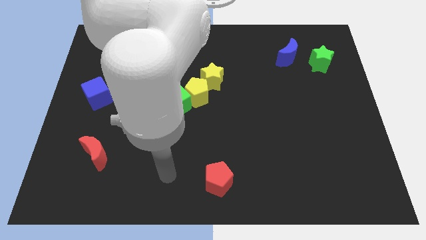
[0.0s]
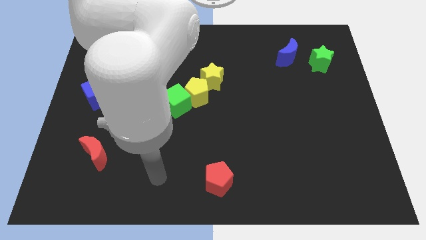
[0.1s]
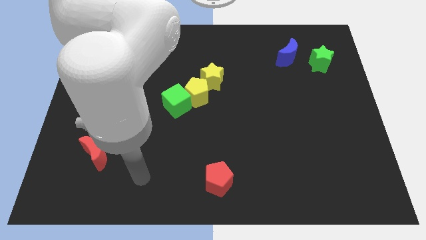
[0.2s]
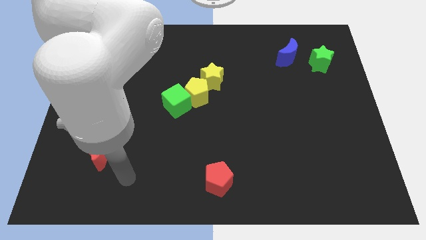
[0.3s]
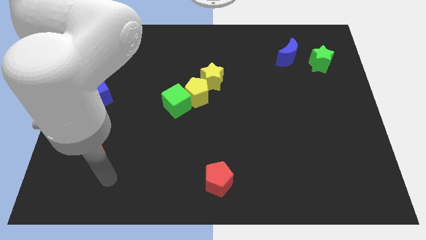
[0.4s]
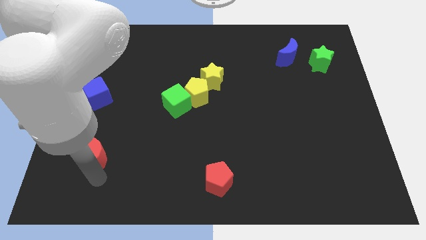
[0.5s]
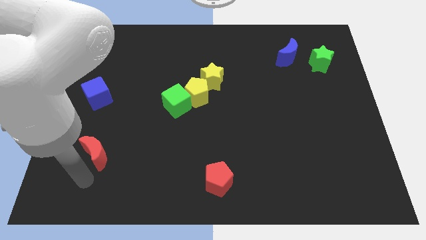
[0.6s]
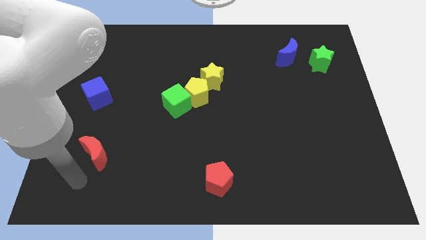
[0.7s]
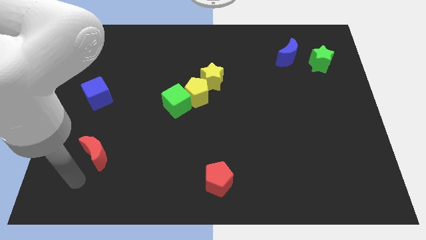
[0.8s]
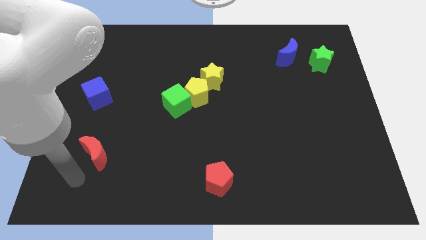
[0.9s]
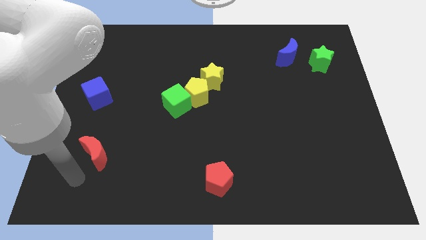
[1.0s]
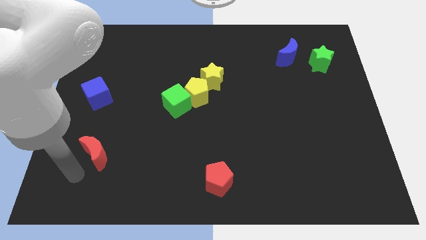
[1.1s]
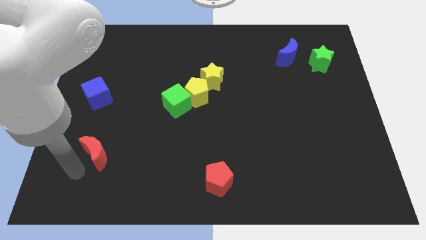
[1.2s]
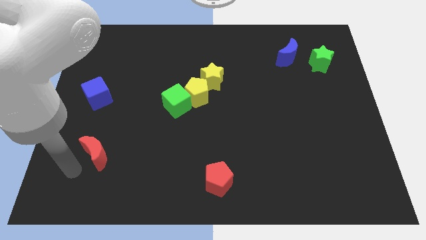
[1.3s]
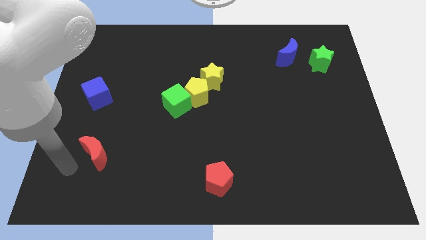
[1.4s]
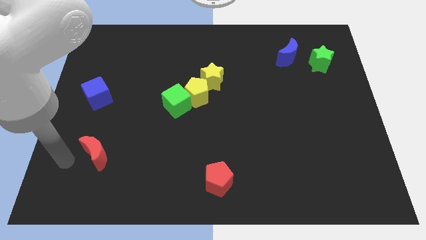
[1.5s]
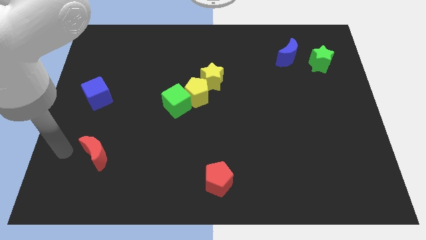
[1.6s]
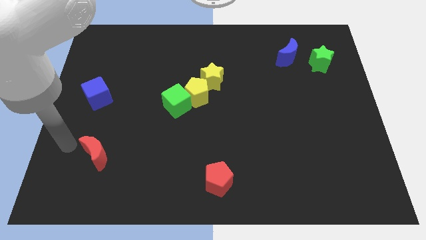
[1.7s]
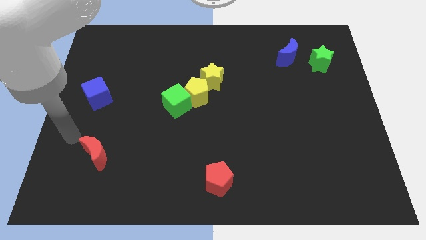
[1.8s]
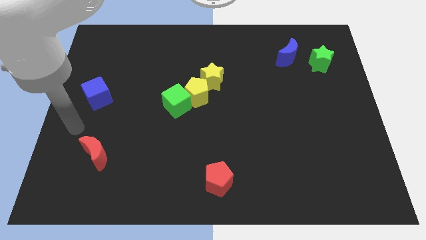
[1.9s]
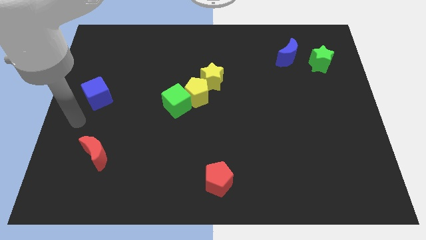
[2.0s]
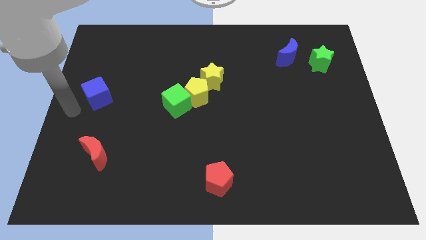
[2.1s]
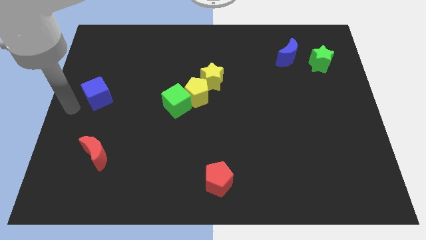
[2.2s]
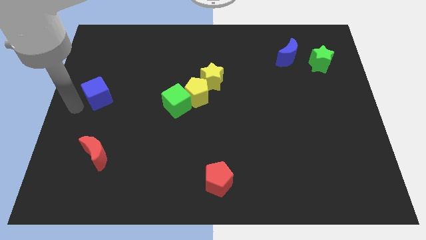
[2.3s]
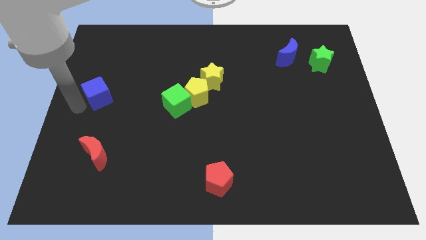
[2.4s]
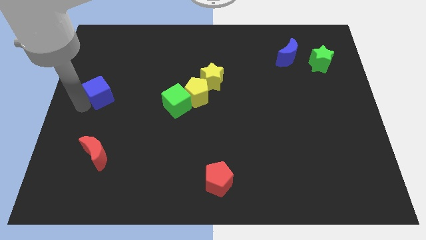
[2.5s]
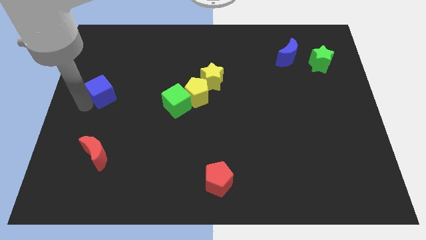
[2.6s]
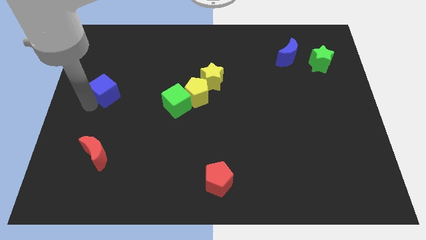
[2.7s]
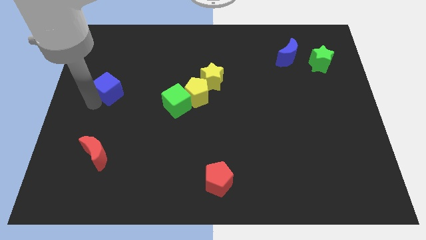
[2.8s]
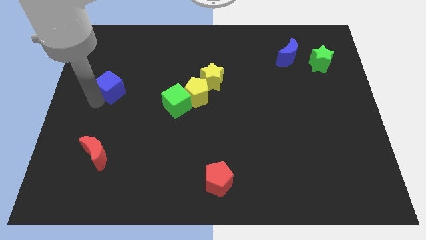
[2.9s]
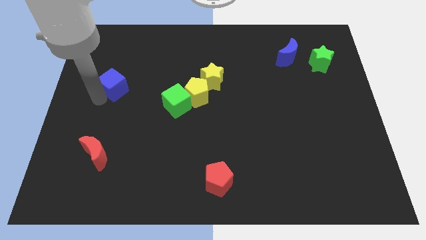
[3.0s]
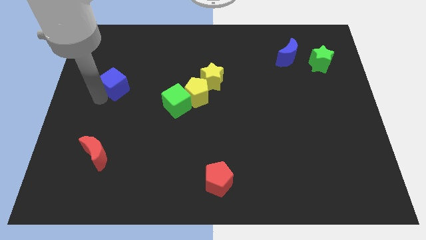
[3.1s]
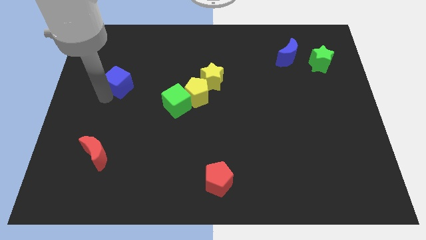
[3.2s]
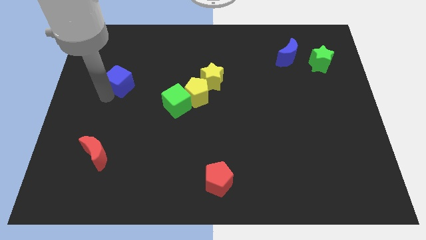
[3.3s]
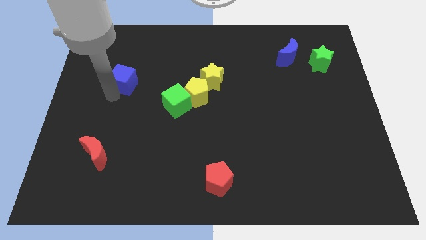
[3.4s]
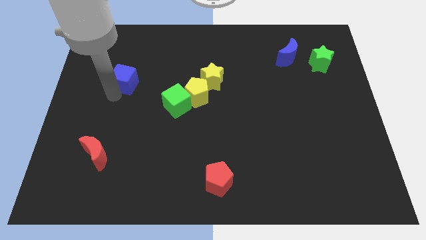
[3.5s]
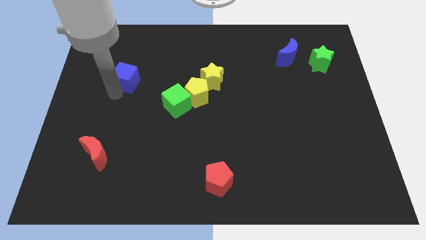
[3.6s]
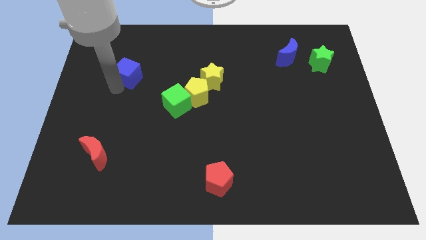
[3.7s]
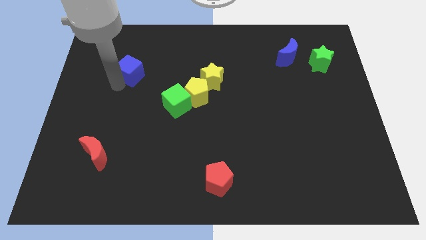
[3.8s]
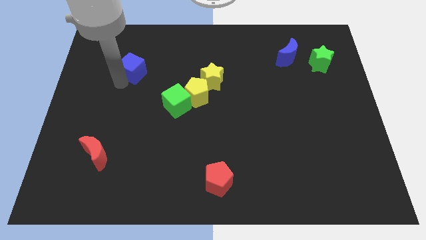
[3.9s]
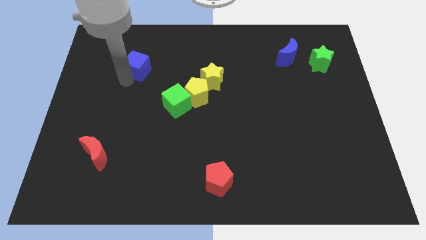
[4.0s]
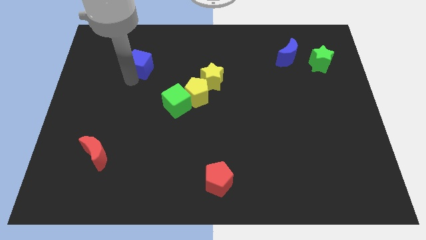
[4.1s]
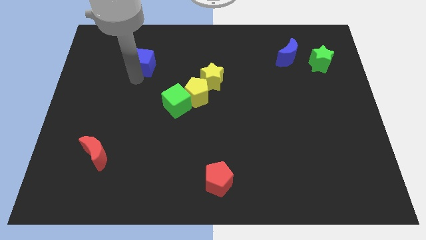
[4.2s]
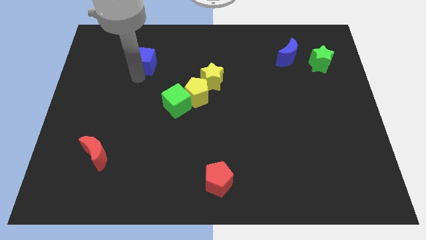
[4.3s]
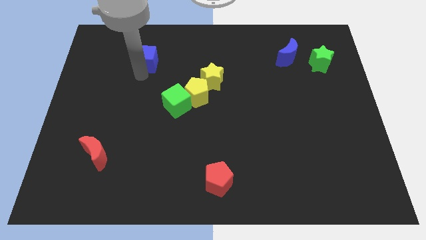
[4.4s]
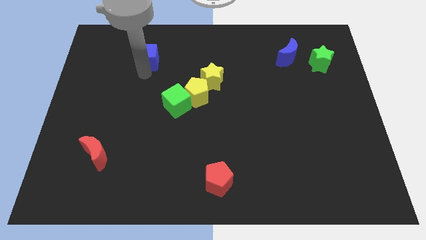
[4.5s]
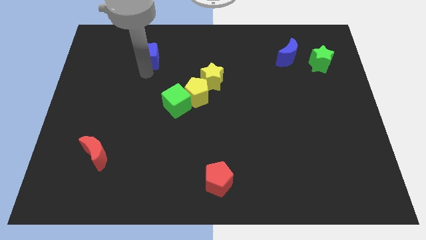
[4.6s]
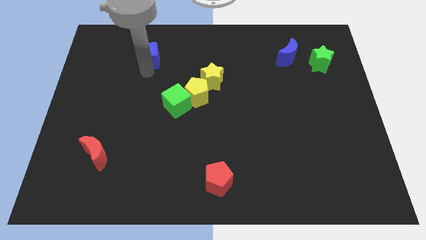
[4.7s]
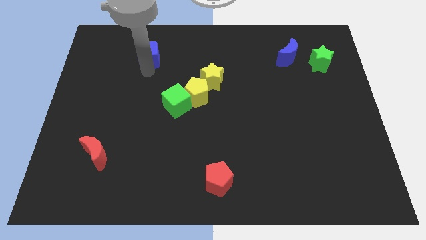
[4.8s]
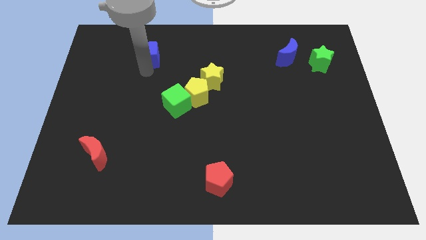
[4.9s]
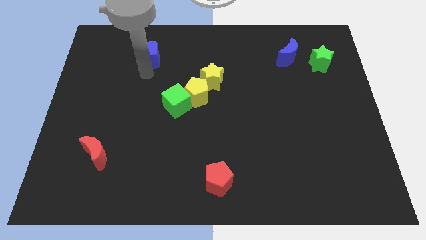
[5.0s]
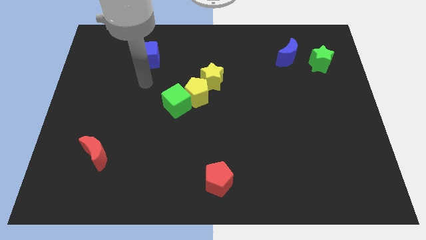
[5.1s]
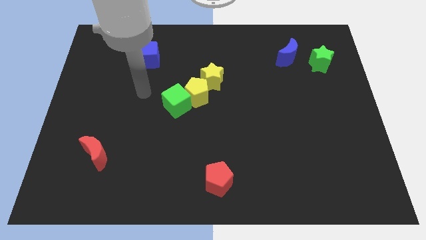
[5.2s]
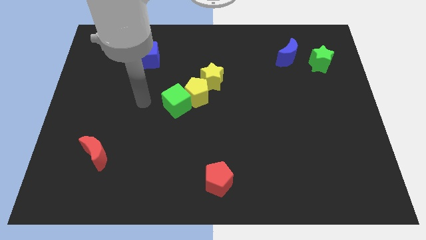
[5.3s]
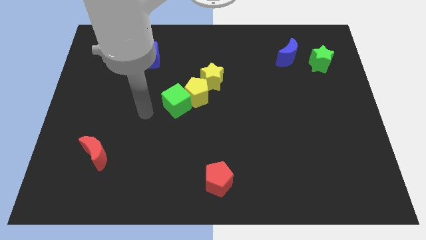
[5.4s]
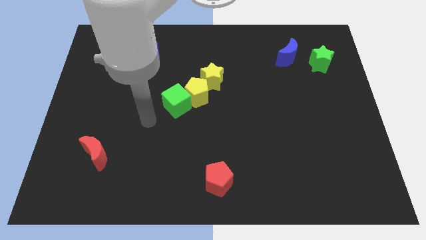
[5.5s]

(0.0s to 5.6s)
move the blue cube to the top center

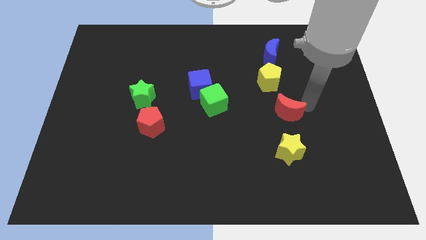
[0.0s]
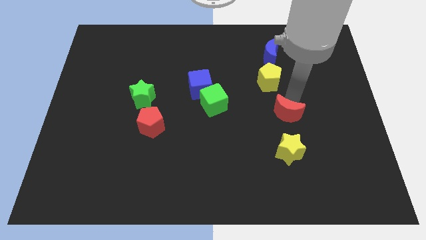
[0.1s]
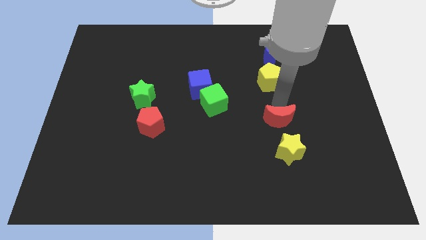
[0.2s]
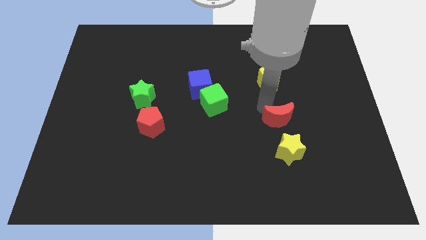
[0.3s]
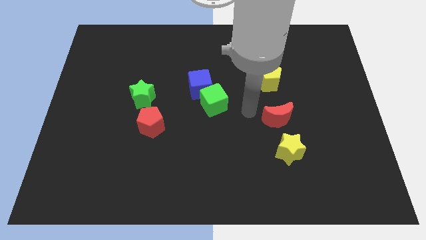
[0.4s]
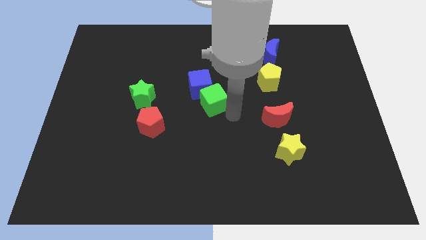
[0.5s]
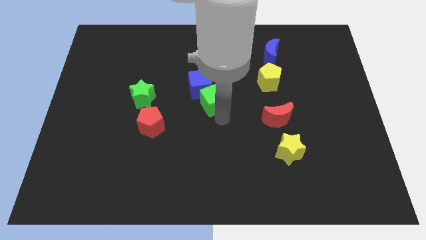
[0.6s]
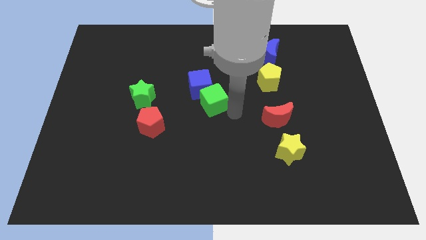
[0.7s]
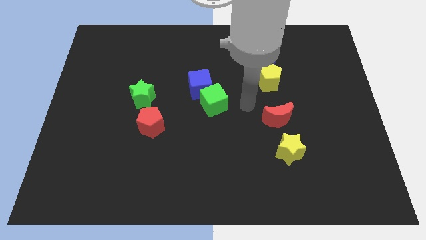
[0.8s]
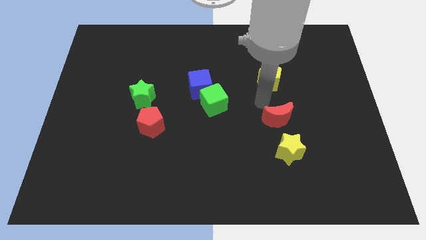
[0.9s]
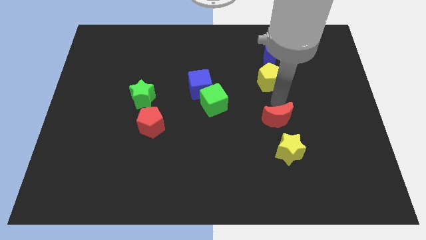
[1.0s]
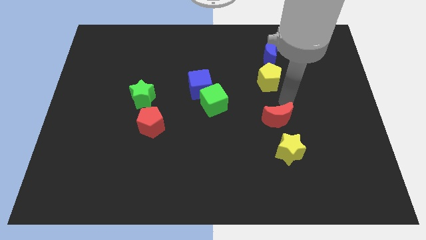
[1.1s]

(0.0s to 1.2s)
slide red crescent slightly left

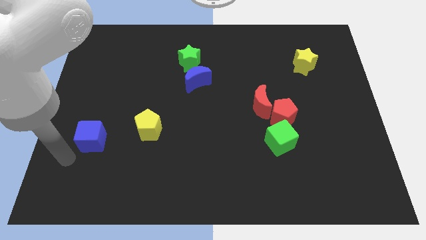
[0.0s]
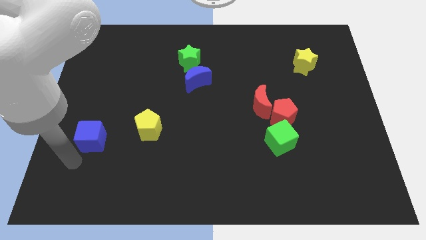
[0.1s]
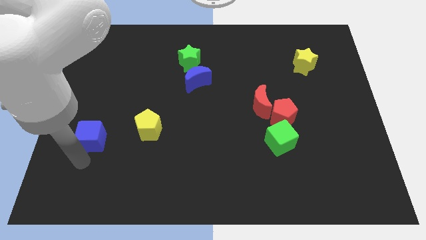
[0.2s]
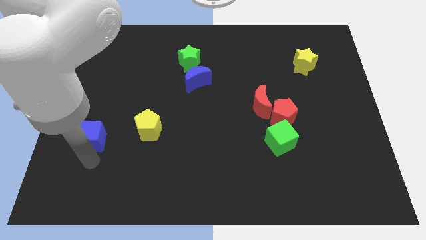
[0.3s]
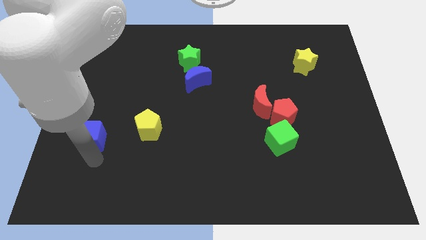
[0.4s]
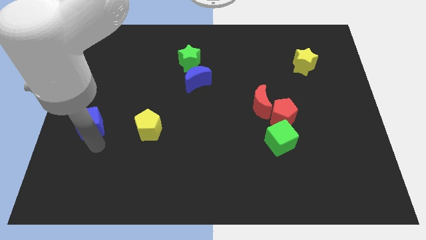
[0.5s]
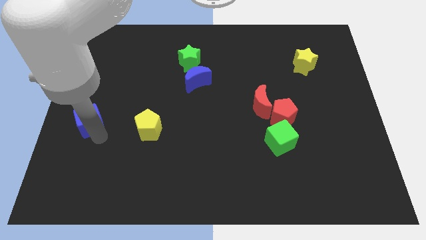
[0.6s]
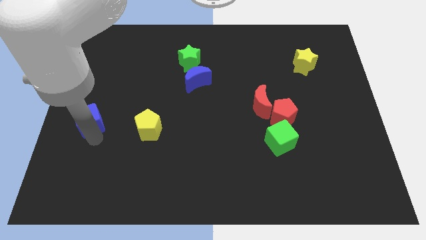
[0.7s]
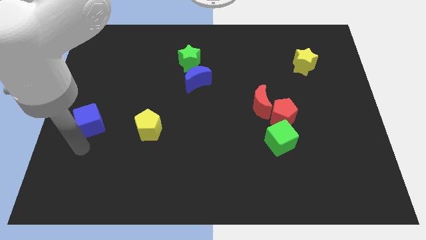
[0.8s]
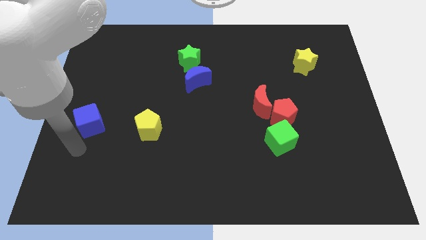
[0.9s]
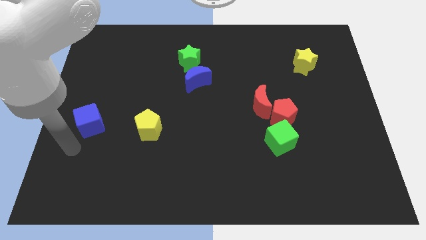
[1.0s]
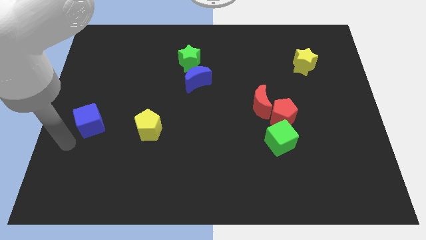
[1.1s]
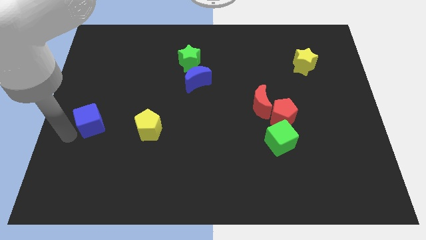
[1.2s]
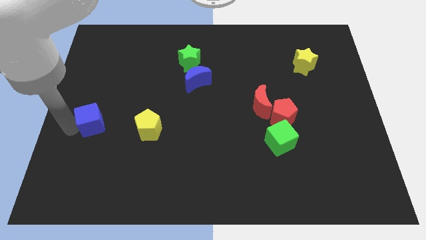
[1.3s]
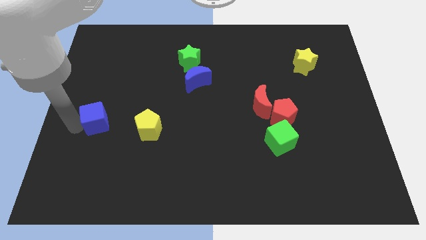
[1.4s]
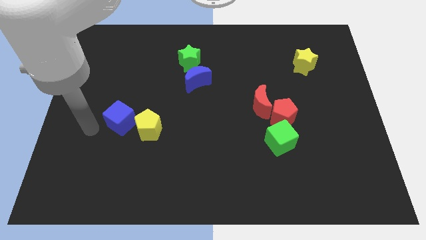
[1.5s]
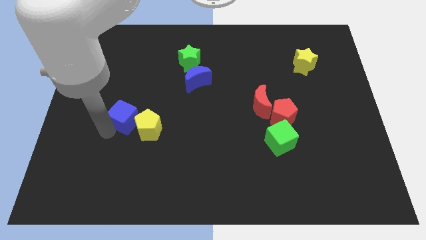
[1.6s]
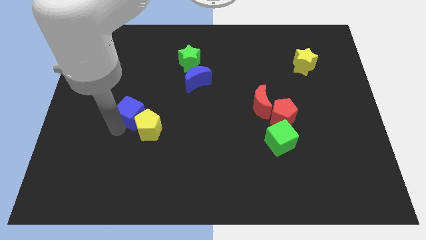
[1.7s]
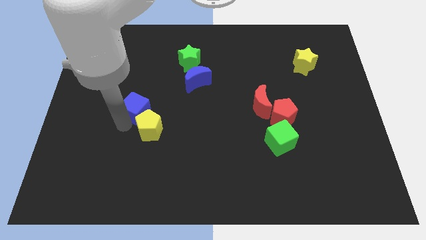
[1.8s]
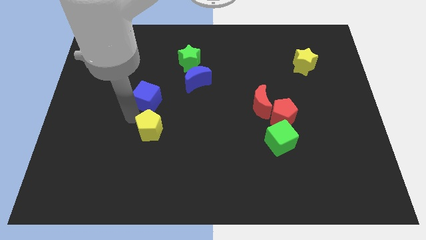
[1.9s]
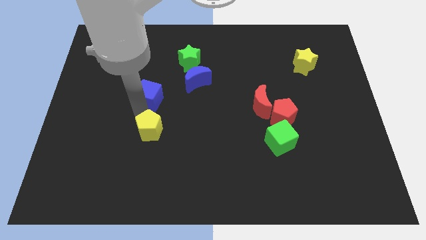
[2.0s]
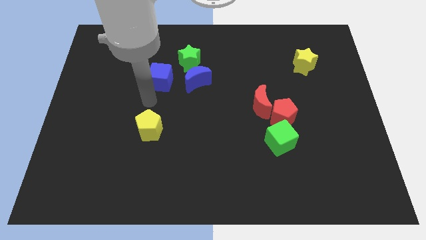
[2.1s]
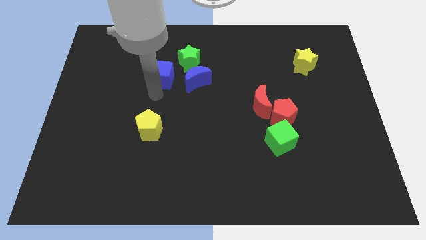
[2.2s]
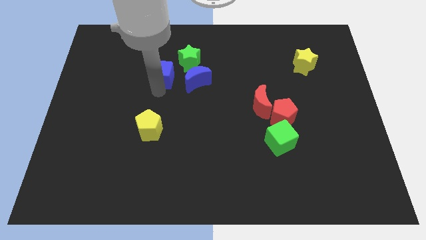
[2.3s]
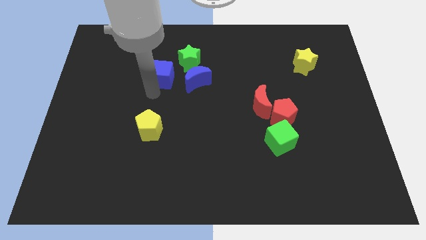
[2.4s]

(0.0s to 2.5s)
push the blue cube close to the green star
